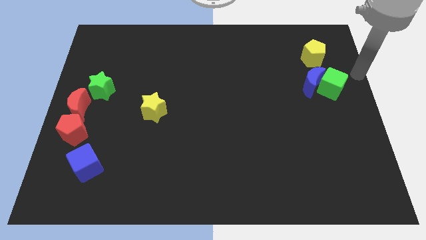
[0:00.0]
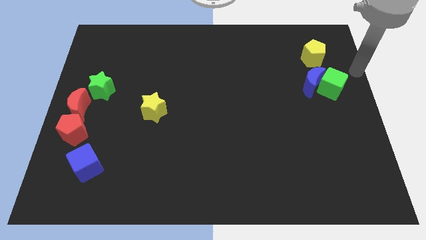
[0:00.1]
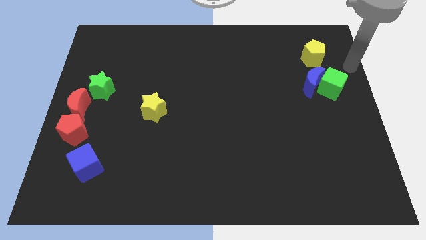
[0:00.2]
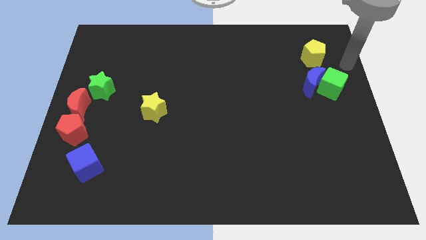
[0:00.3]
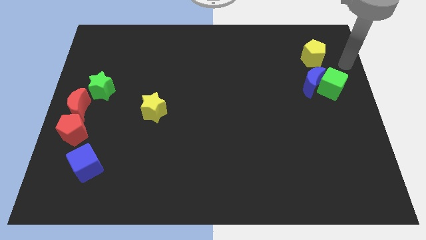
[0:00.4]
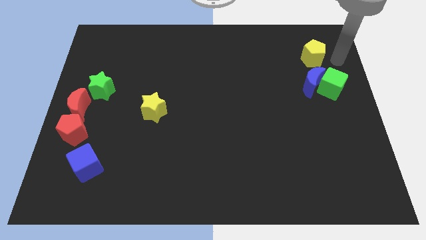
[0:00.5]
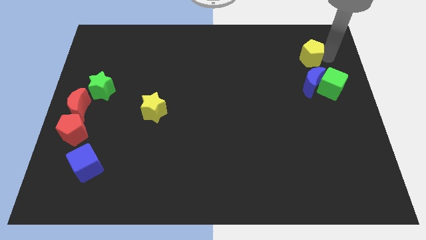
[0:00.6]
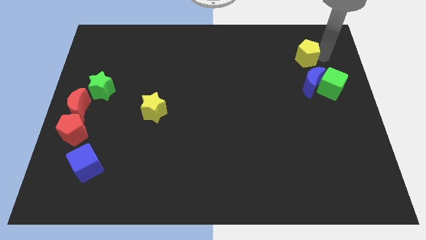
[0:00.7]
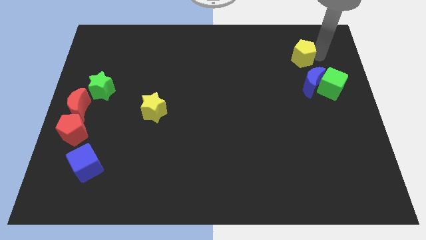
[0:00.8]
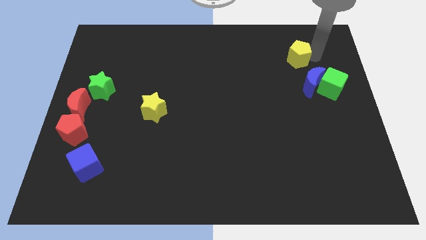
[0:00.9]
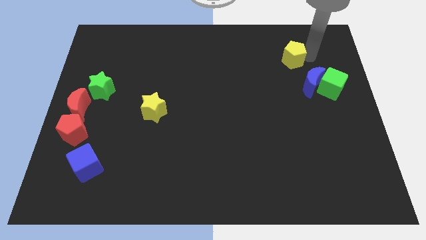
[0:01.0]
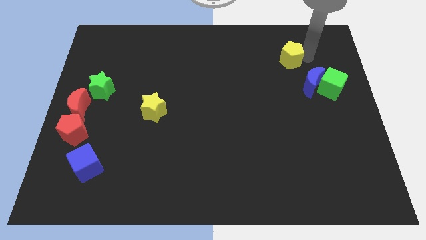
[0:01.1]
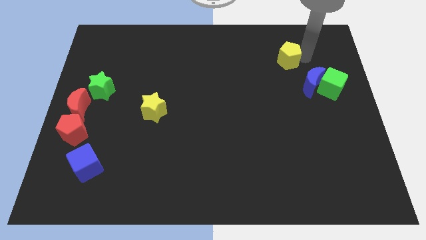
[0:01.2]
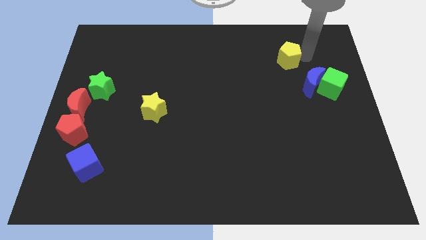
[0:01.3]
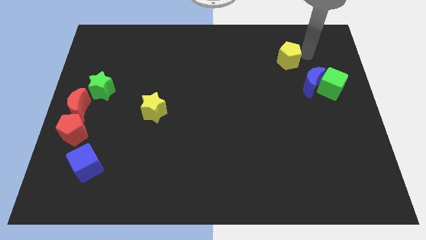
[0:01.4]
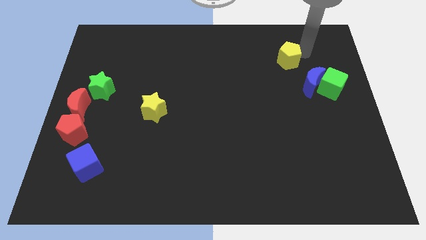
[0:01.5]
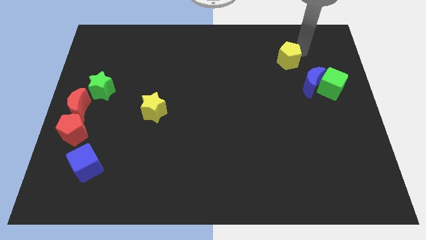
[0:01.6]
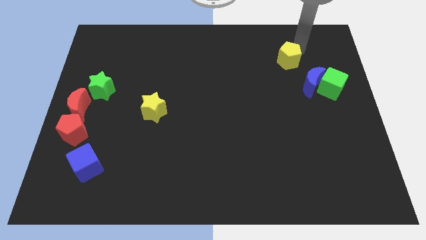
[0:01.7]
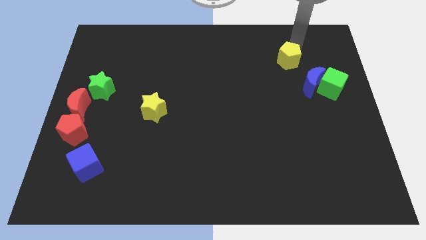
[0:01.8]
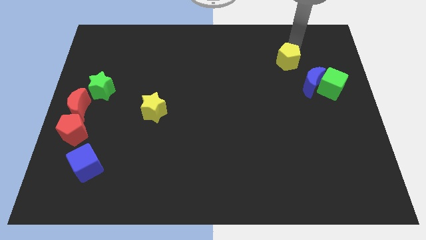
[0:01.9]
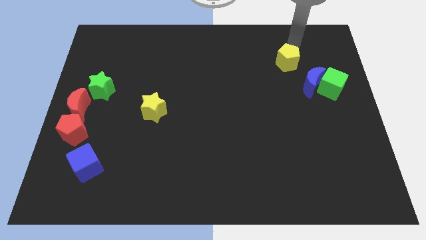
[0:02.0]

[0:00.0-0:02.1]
separate the yellow pentagon from green cube and the blue crescent

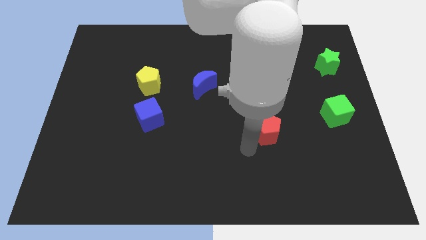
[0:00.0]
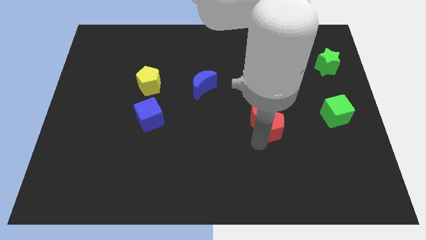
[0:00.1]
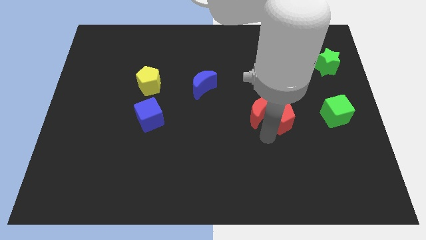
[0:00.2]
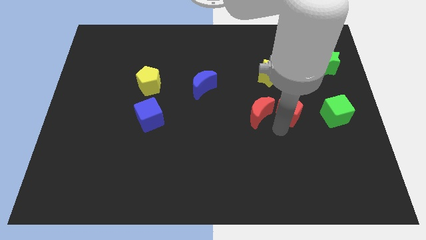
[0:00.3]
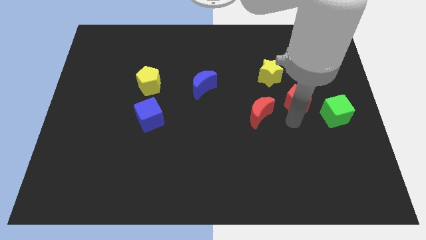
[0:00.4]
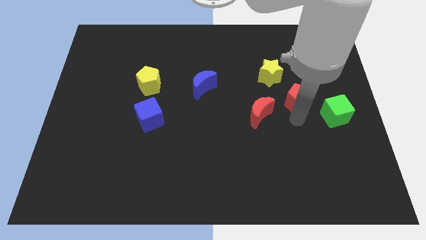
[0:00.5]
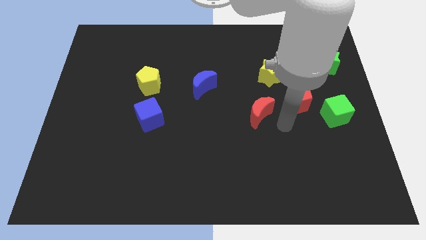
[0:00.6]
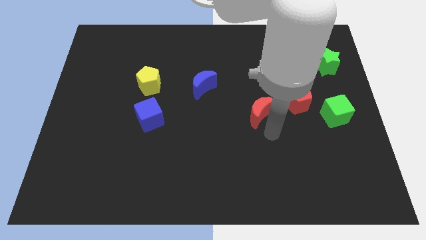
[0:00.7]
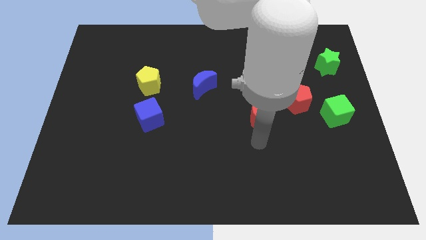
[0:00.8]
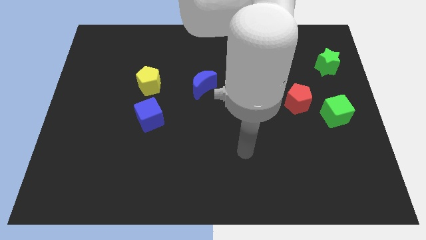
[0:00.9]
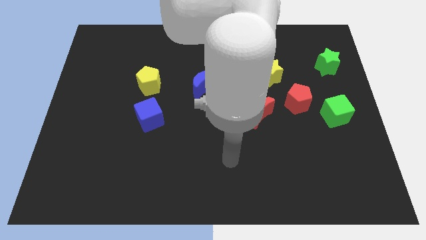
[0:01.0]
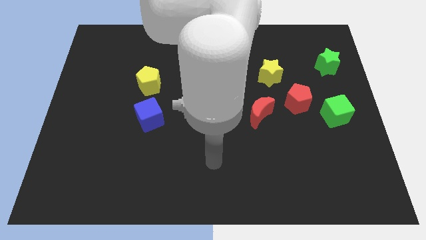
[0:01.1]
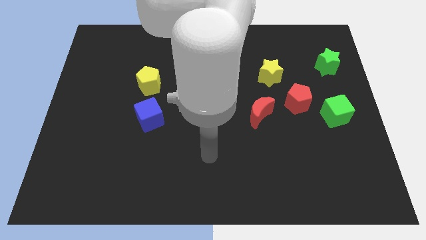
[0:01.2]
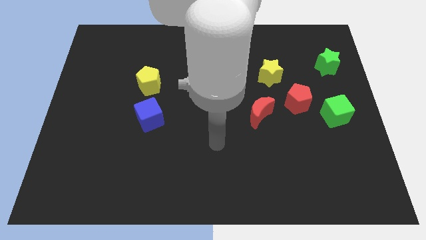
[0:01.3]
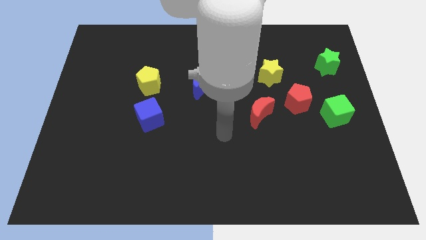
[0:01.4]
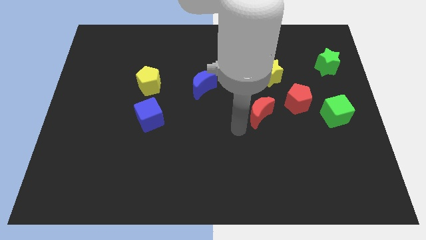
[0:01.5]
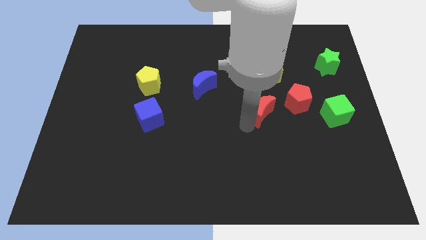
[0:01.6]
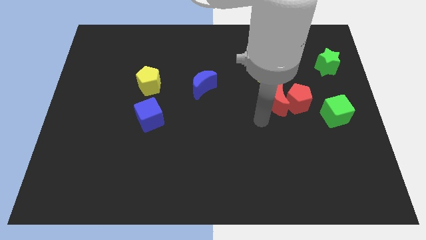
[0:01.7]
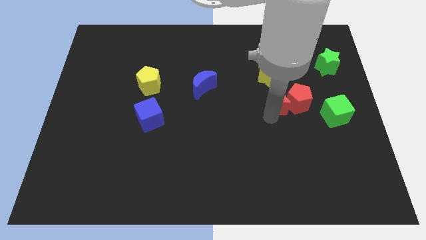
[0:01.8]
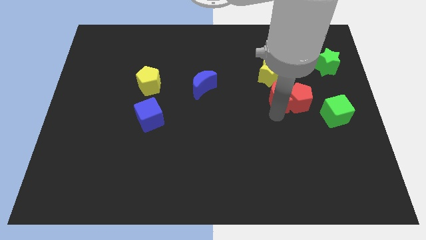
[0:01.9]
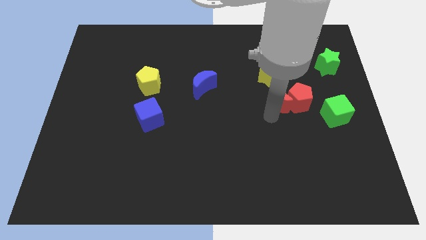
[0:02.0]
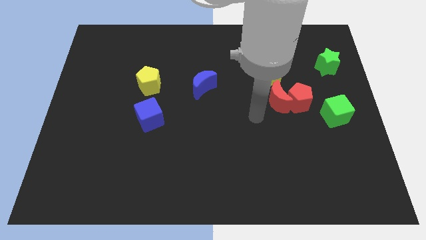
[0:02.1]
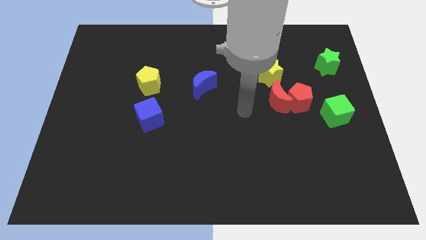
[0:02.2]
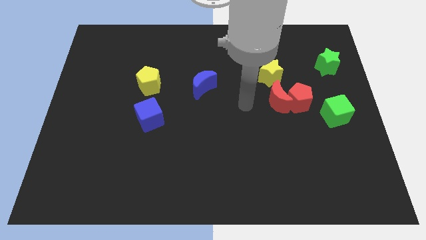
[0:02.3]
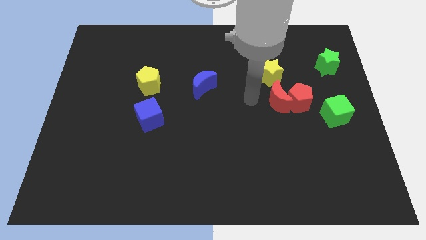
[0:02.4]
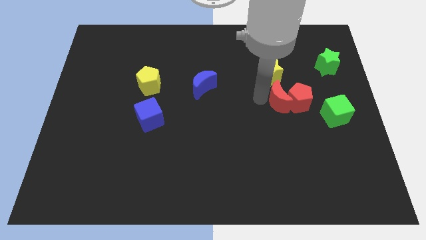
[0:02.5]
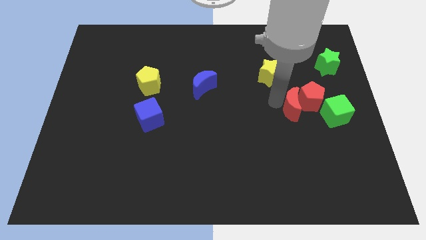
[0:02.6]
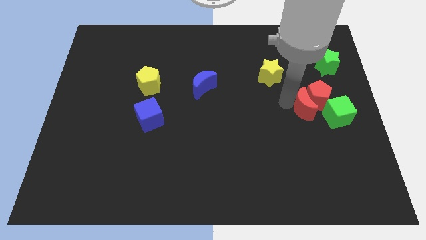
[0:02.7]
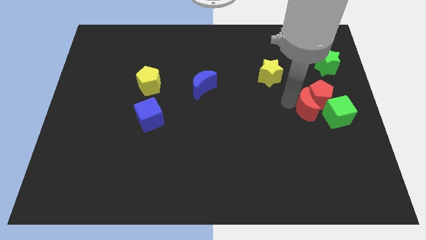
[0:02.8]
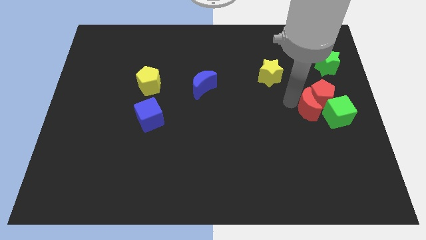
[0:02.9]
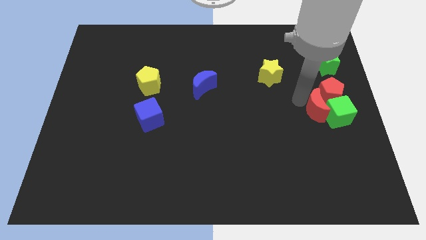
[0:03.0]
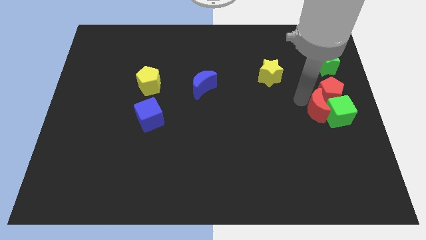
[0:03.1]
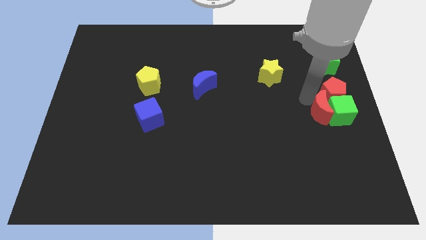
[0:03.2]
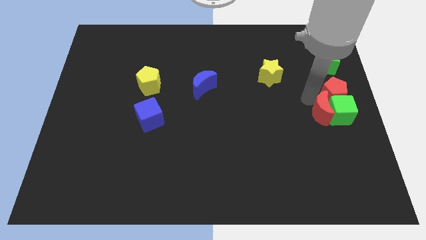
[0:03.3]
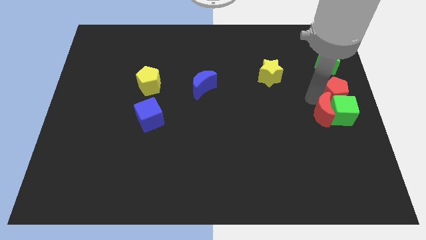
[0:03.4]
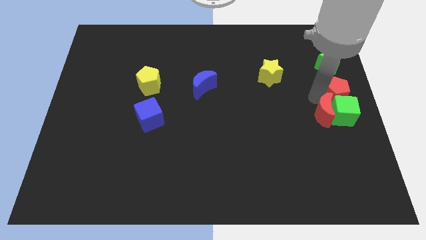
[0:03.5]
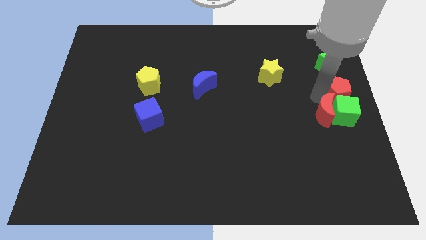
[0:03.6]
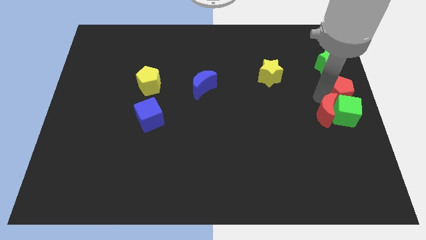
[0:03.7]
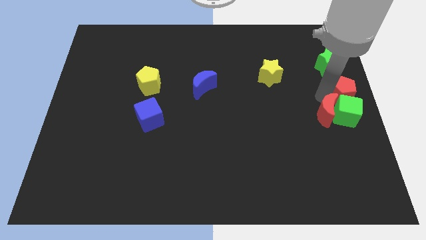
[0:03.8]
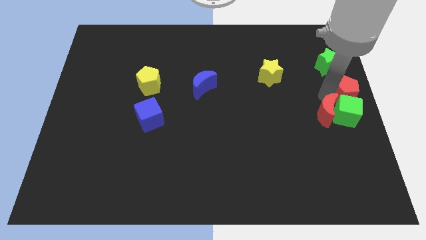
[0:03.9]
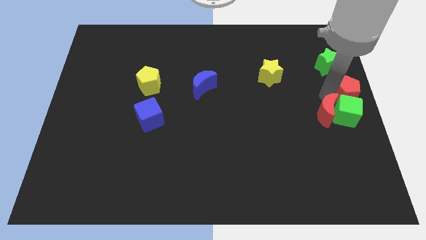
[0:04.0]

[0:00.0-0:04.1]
move the red pentagon and red crescent into the green cube

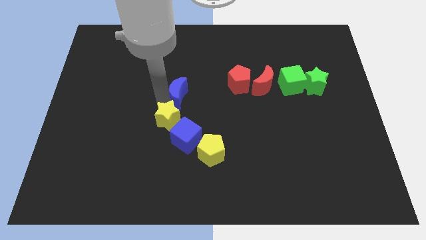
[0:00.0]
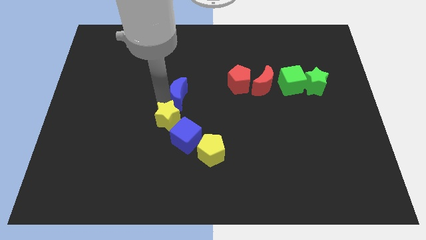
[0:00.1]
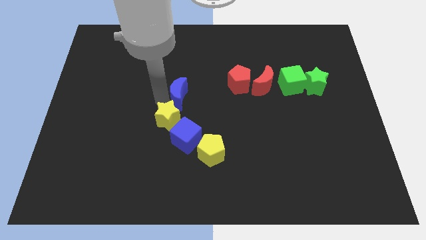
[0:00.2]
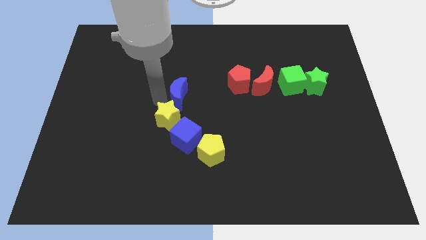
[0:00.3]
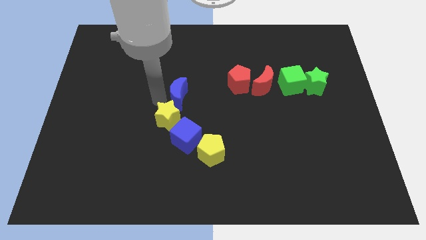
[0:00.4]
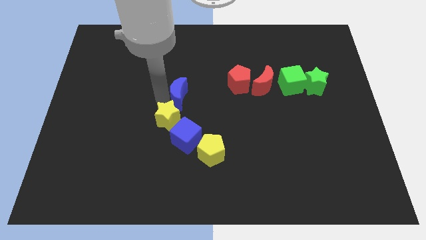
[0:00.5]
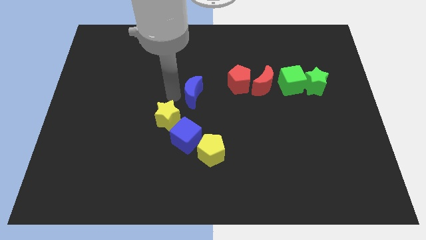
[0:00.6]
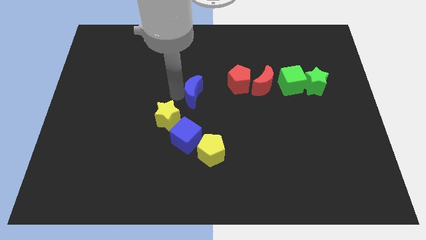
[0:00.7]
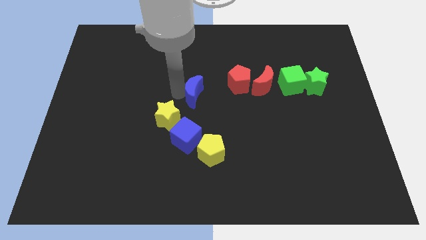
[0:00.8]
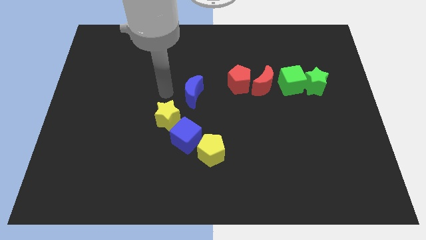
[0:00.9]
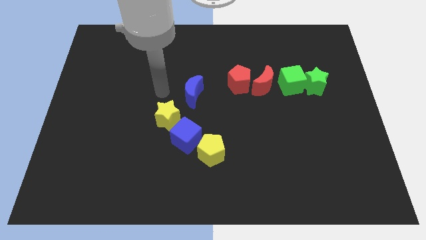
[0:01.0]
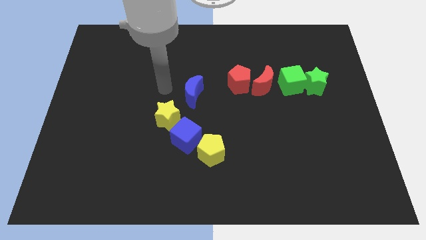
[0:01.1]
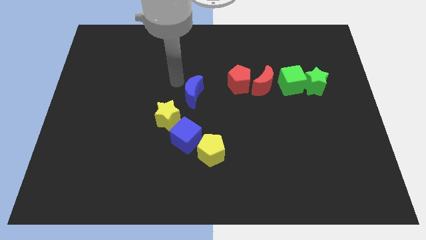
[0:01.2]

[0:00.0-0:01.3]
move the blue moon towards the red pentagon

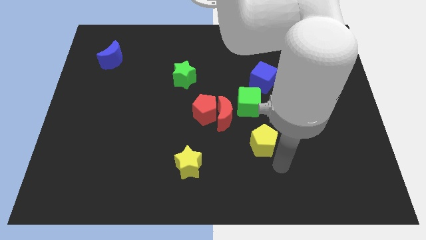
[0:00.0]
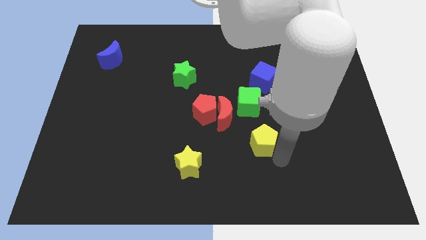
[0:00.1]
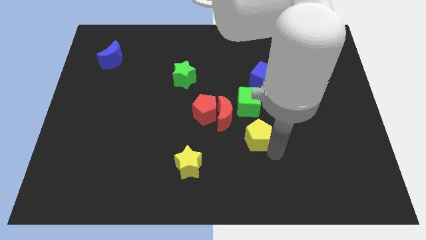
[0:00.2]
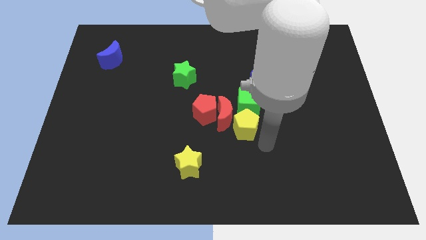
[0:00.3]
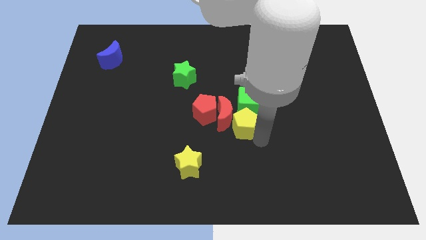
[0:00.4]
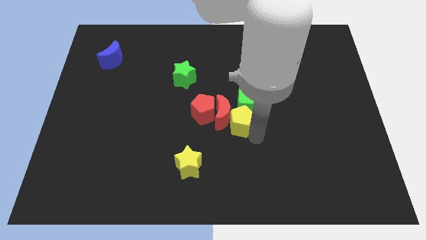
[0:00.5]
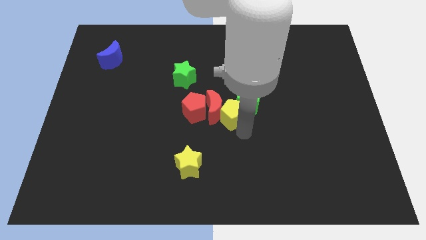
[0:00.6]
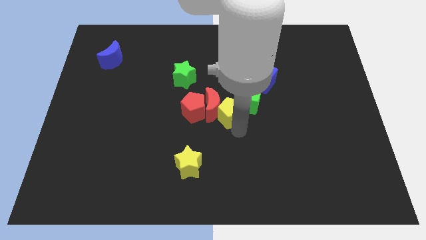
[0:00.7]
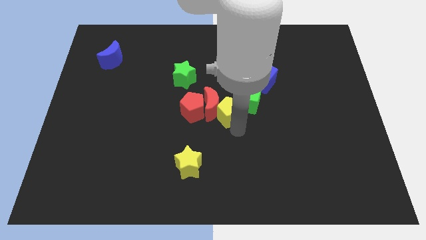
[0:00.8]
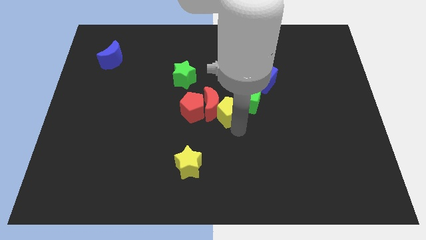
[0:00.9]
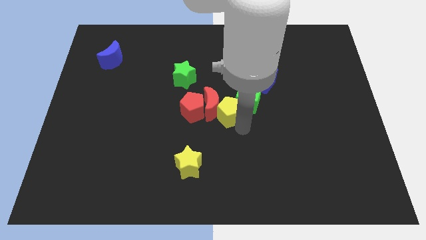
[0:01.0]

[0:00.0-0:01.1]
push the yellow pentagon into the red crescent

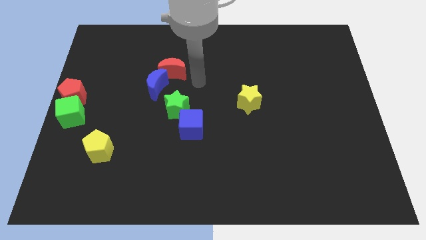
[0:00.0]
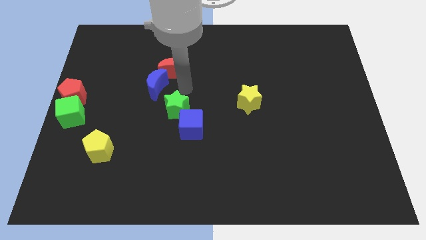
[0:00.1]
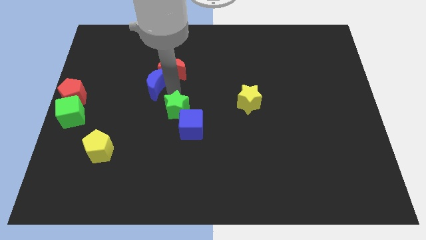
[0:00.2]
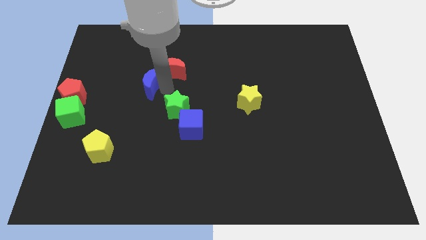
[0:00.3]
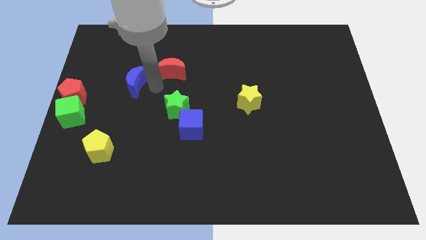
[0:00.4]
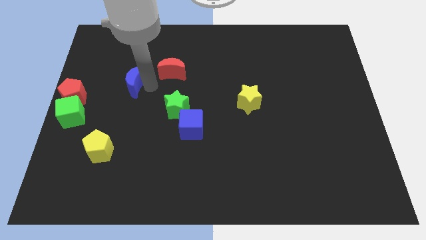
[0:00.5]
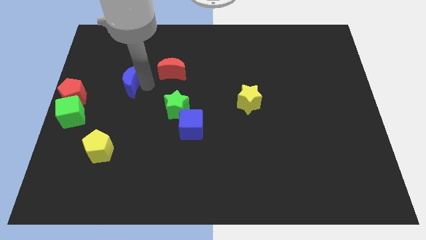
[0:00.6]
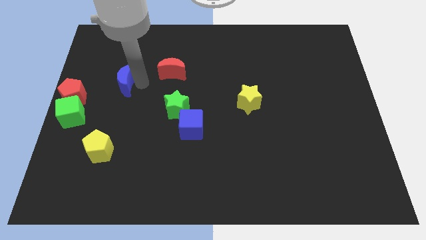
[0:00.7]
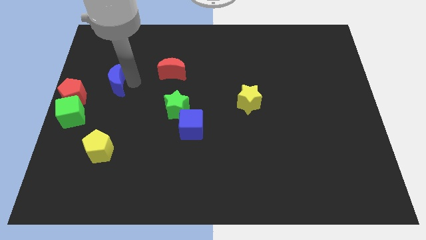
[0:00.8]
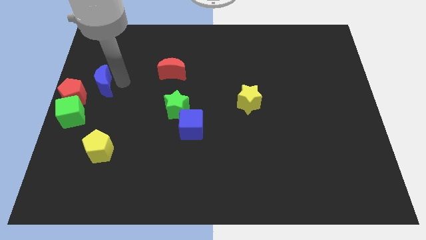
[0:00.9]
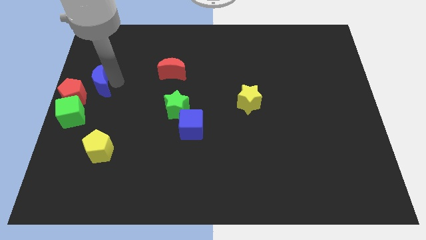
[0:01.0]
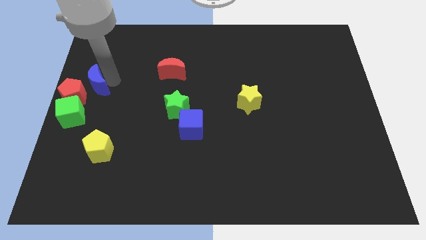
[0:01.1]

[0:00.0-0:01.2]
separate the blue moon and red moon
